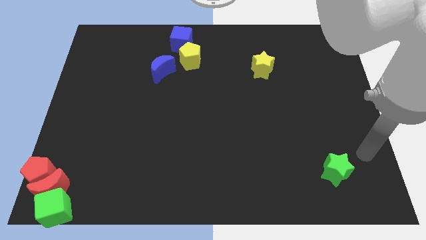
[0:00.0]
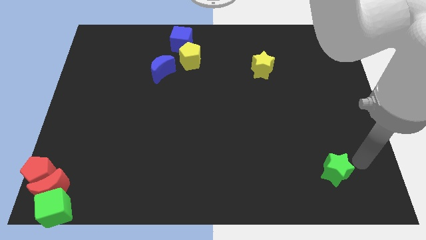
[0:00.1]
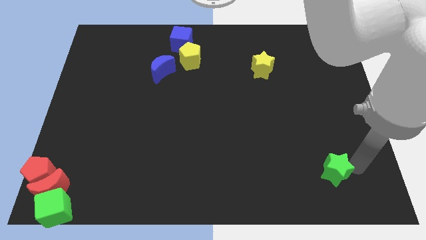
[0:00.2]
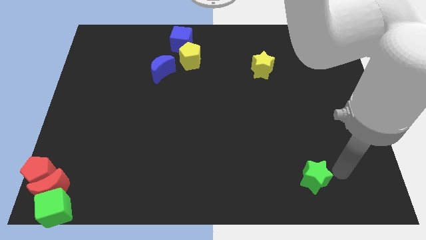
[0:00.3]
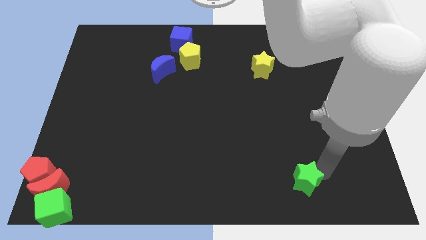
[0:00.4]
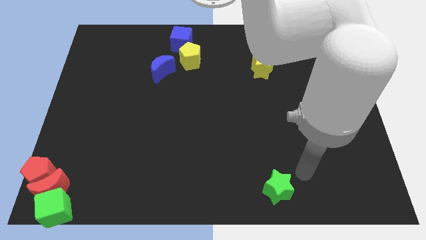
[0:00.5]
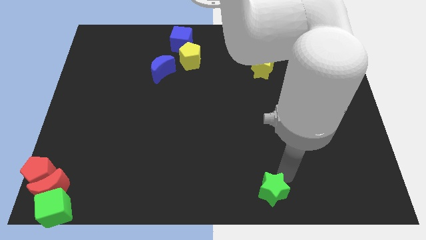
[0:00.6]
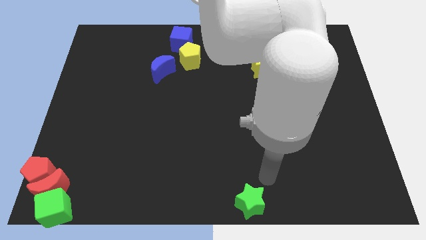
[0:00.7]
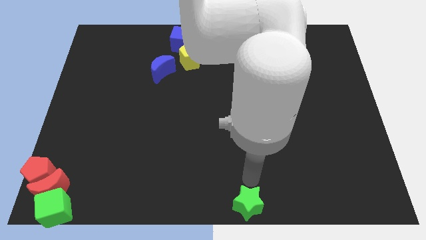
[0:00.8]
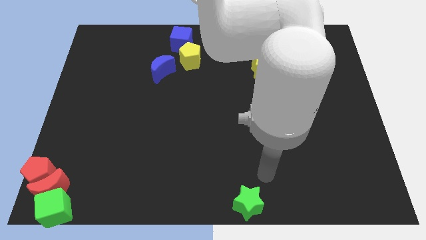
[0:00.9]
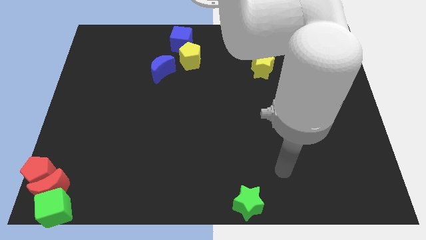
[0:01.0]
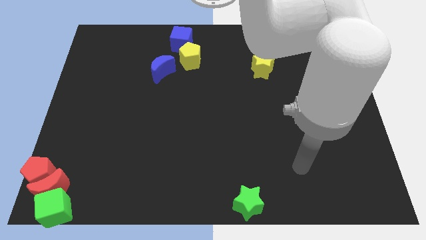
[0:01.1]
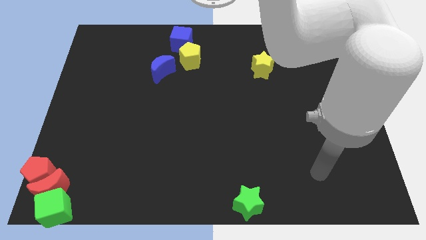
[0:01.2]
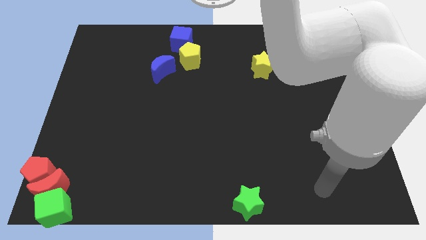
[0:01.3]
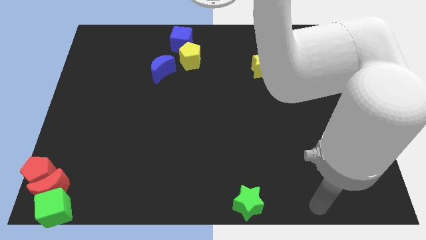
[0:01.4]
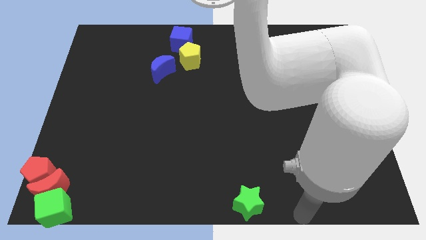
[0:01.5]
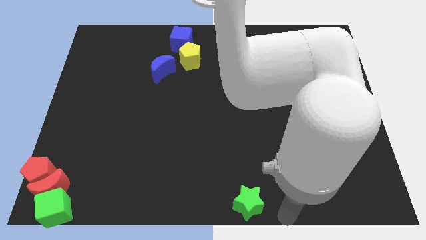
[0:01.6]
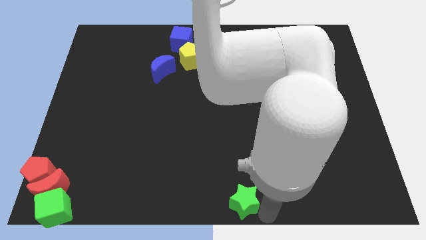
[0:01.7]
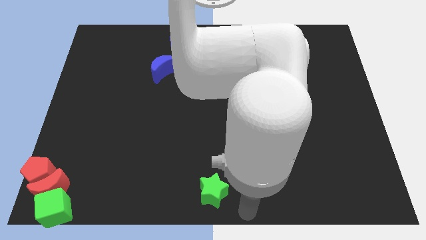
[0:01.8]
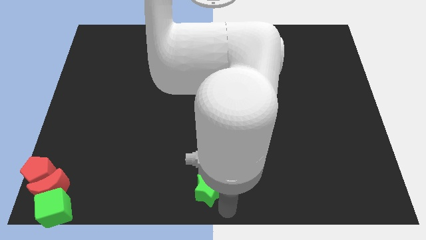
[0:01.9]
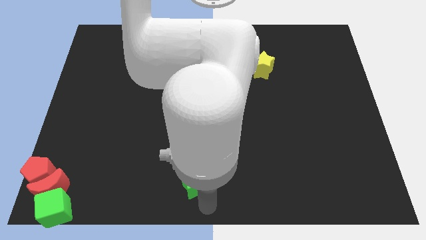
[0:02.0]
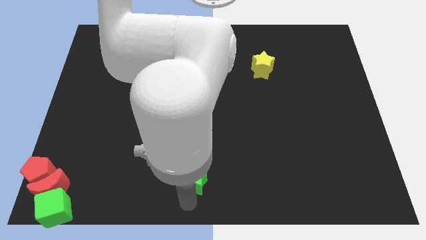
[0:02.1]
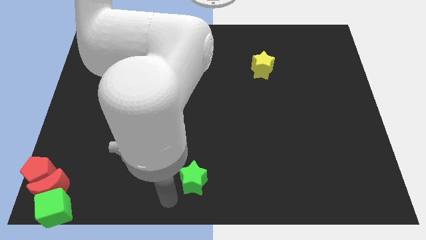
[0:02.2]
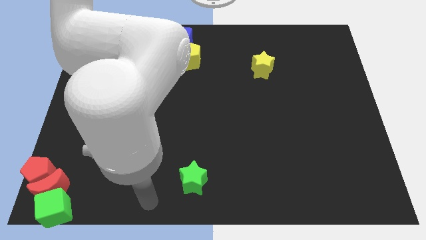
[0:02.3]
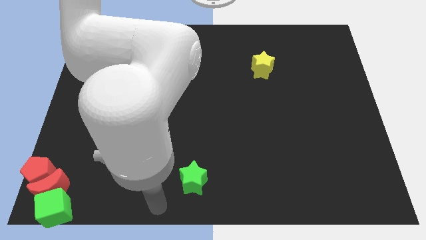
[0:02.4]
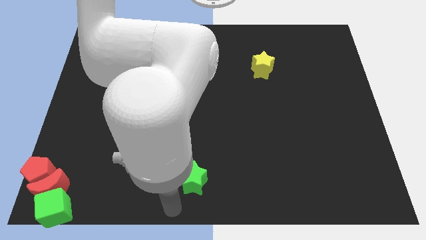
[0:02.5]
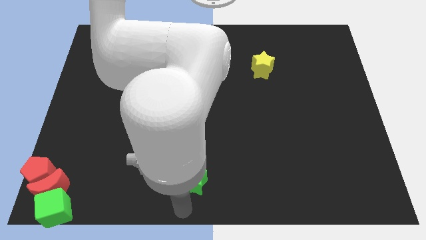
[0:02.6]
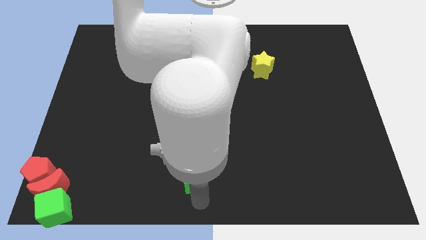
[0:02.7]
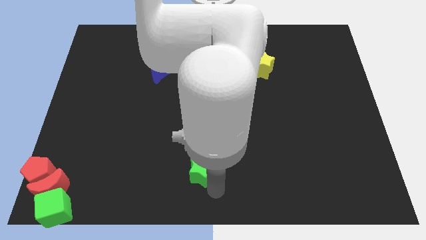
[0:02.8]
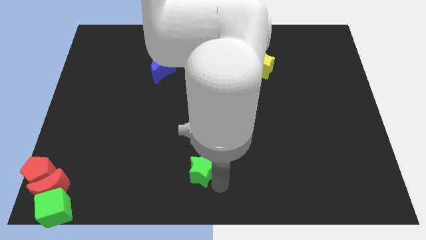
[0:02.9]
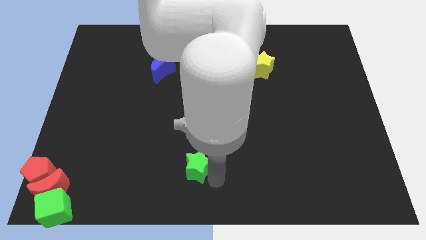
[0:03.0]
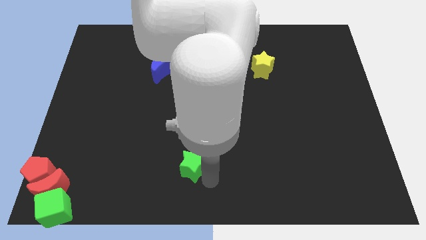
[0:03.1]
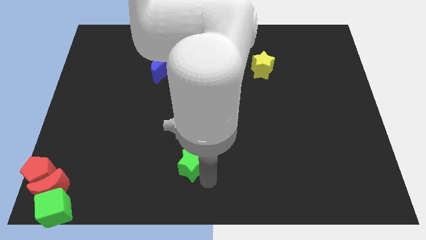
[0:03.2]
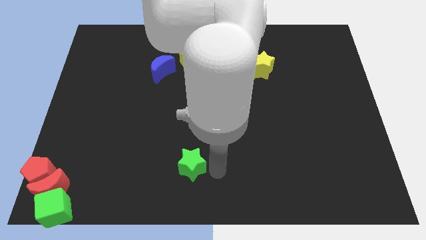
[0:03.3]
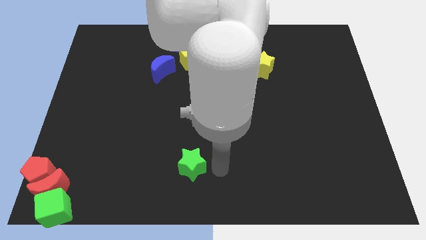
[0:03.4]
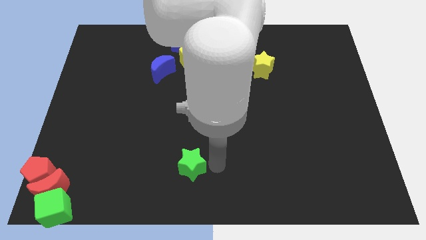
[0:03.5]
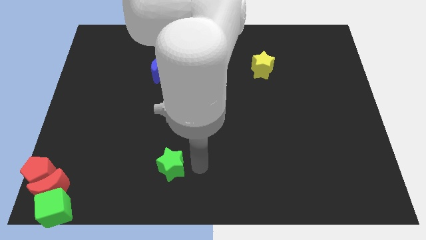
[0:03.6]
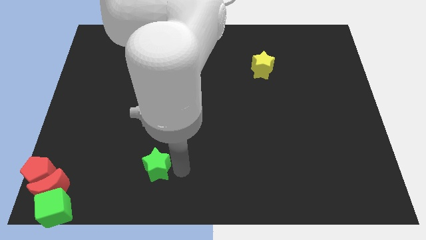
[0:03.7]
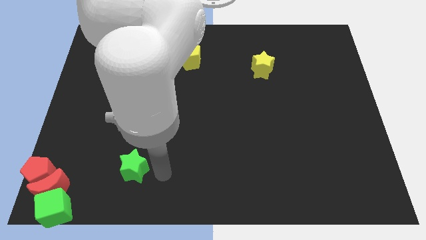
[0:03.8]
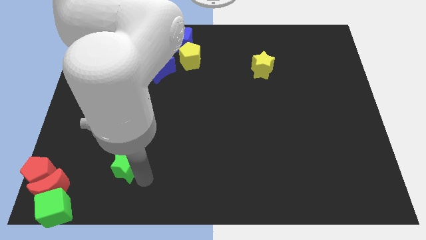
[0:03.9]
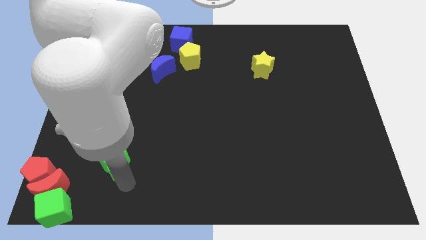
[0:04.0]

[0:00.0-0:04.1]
push the green star towards the left side of the board

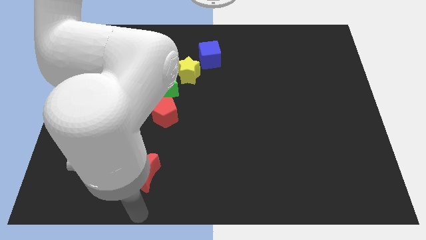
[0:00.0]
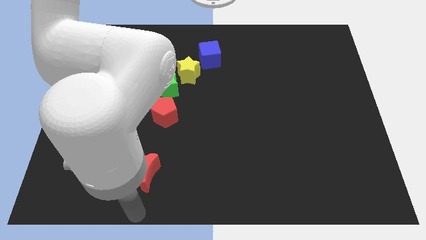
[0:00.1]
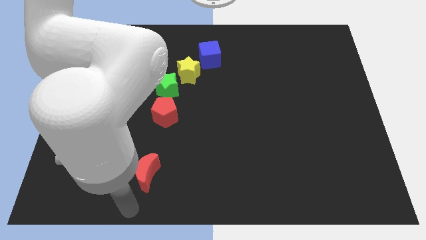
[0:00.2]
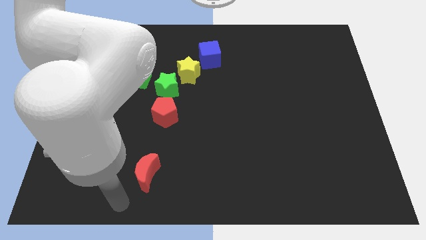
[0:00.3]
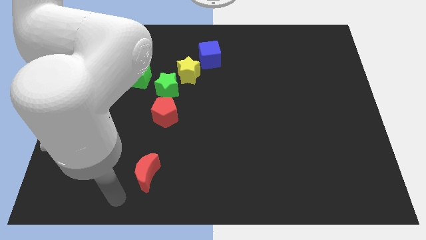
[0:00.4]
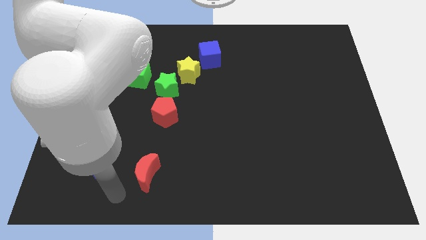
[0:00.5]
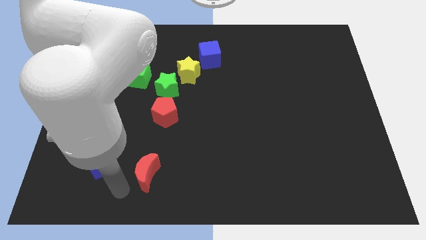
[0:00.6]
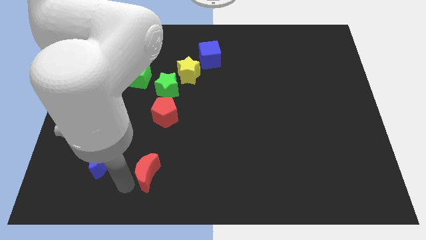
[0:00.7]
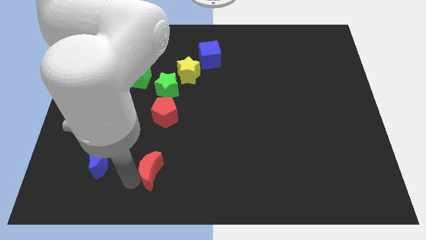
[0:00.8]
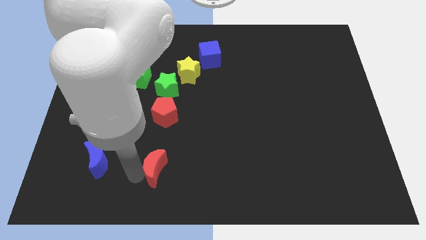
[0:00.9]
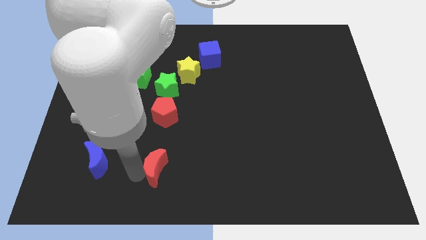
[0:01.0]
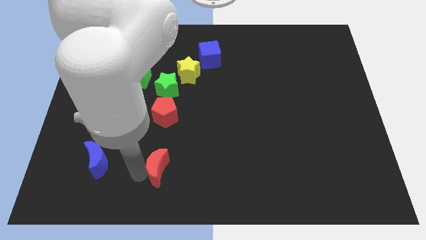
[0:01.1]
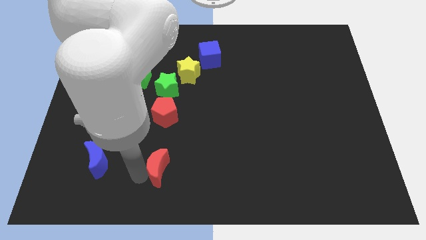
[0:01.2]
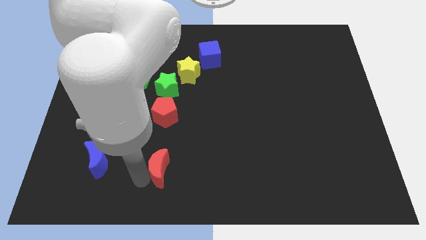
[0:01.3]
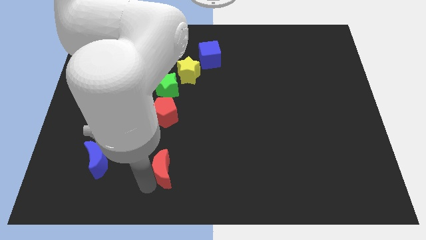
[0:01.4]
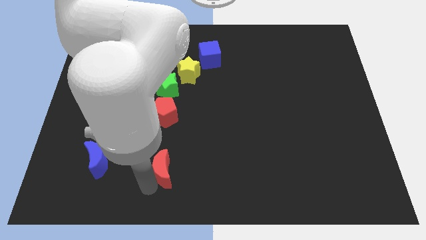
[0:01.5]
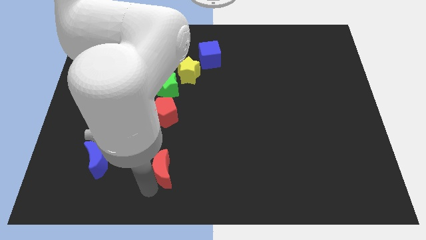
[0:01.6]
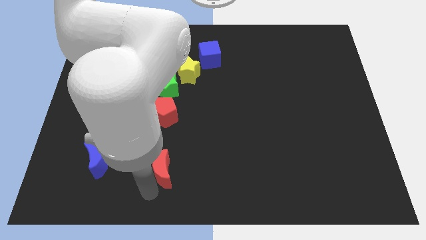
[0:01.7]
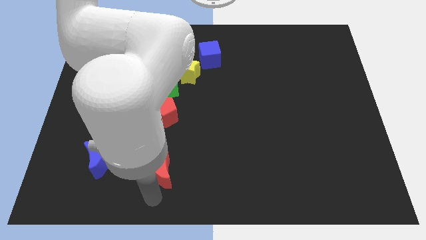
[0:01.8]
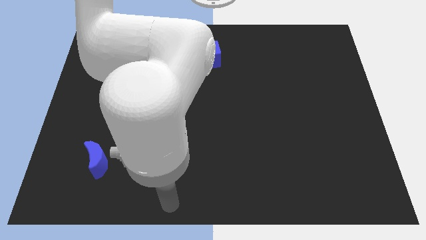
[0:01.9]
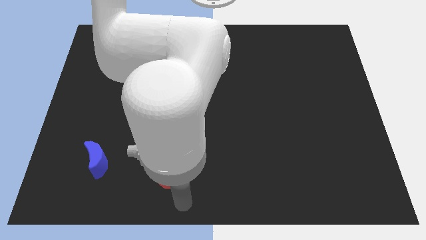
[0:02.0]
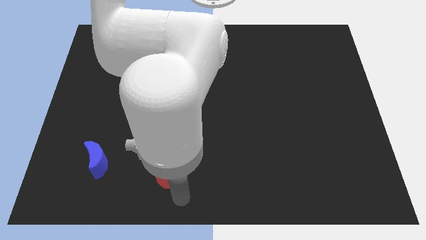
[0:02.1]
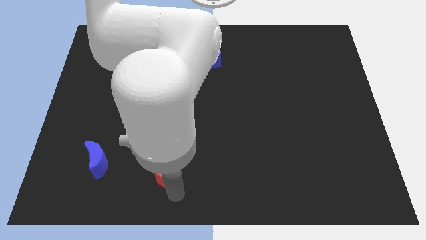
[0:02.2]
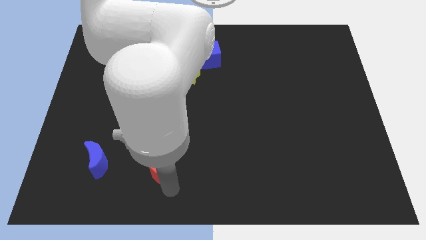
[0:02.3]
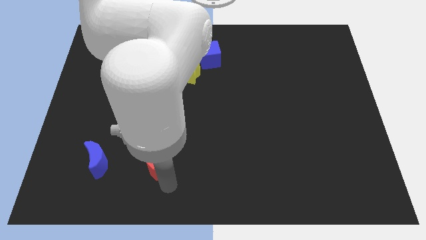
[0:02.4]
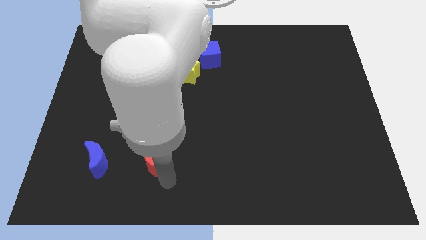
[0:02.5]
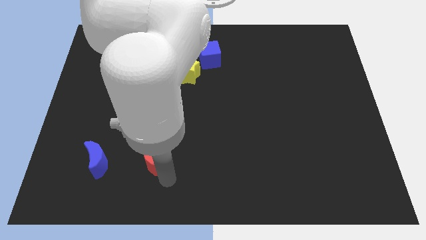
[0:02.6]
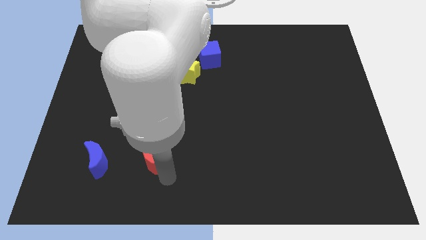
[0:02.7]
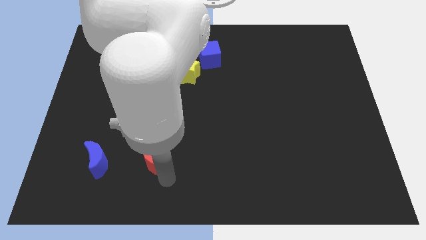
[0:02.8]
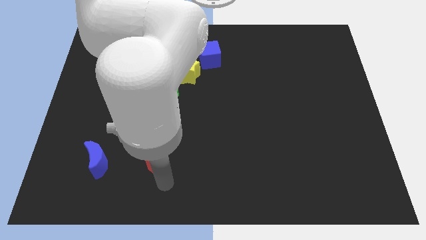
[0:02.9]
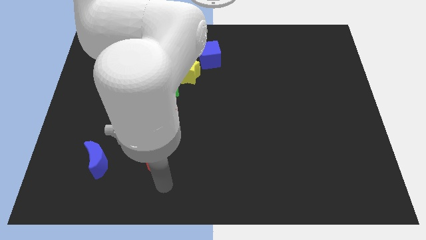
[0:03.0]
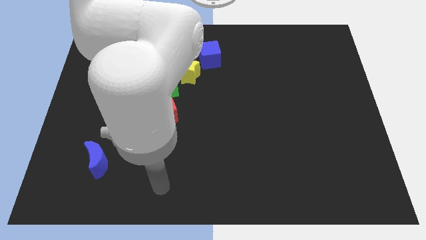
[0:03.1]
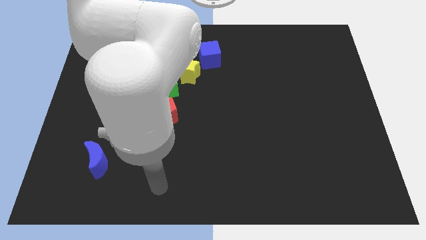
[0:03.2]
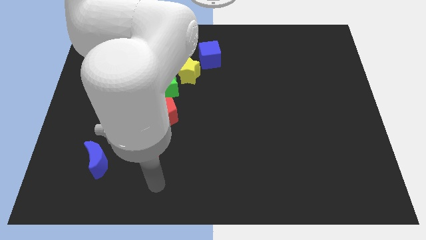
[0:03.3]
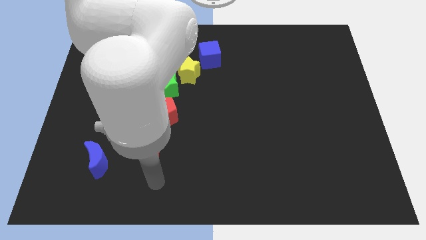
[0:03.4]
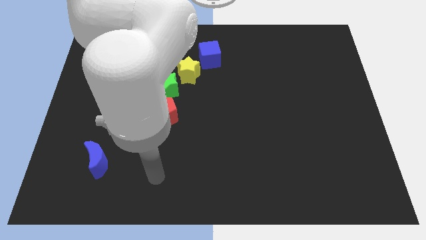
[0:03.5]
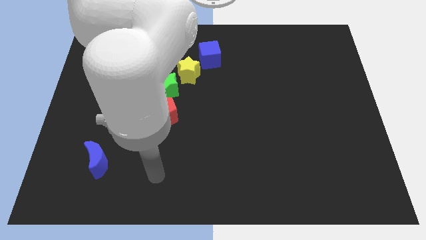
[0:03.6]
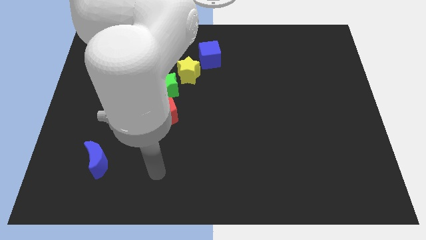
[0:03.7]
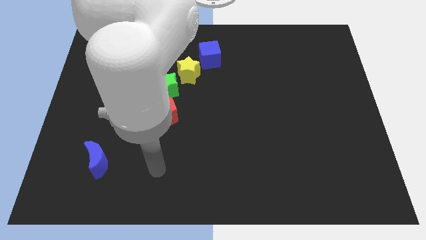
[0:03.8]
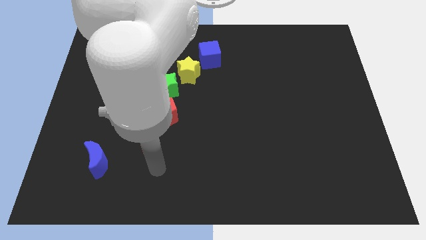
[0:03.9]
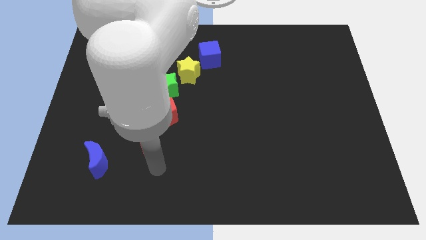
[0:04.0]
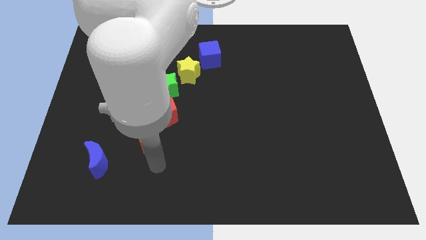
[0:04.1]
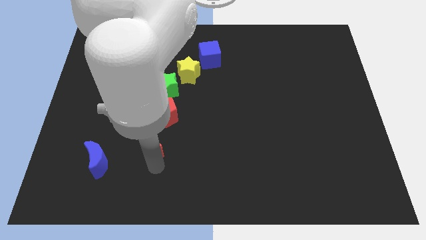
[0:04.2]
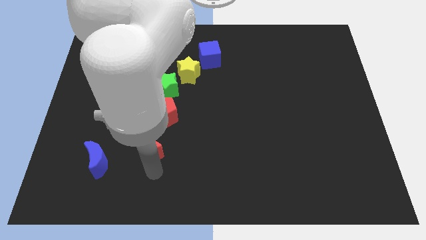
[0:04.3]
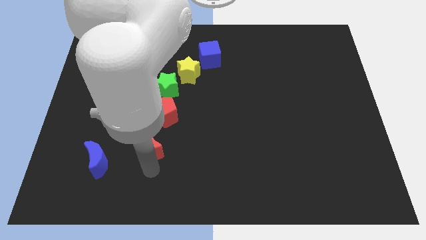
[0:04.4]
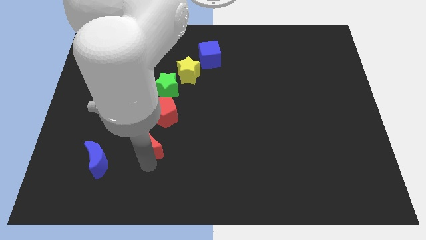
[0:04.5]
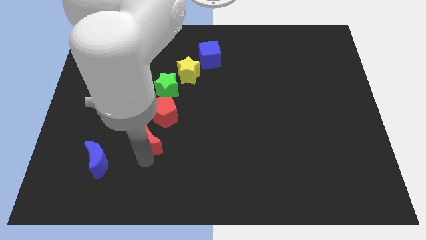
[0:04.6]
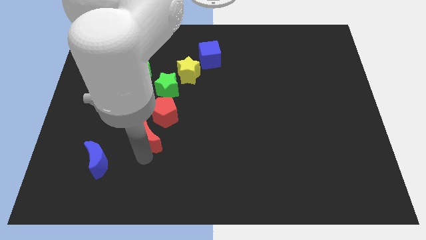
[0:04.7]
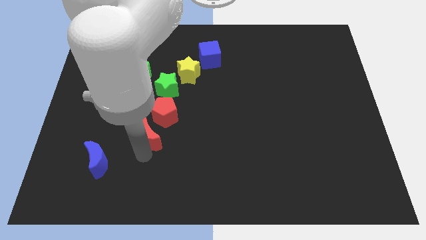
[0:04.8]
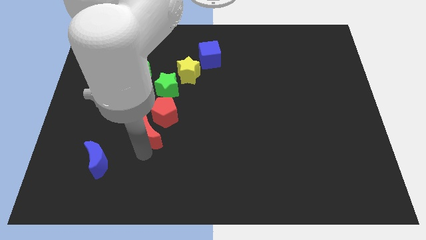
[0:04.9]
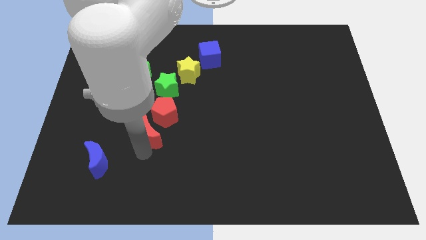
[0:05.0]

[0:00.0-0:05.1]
push red moon towards red pentagon
